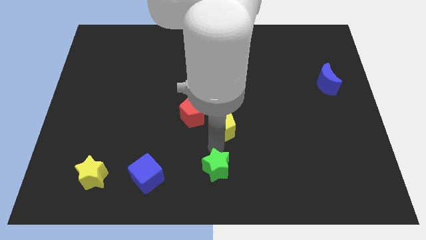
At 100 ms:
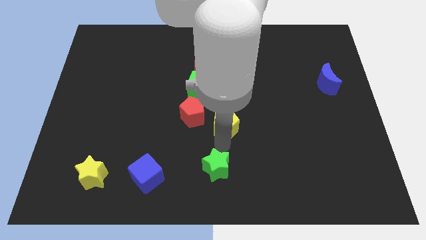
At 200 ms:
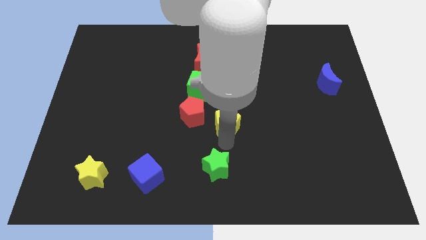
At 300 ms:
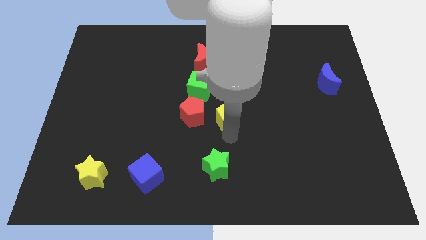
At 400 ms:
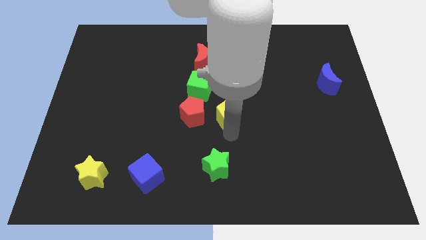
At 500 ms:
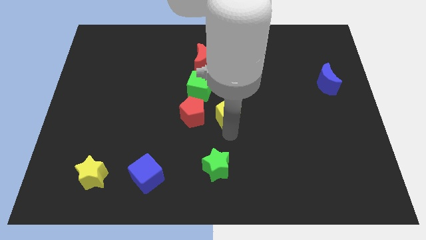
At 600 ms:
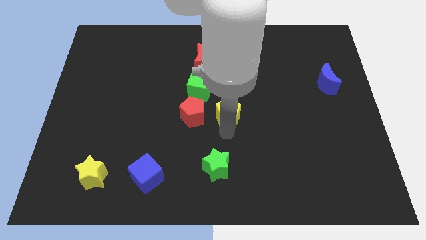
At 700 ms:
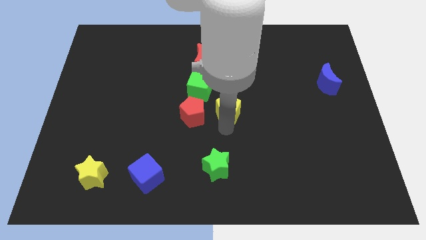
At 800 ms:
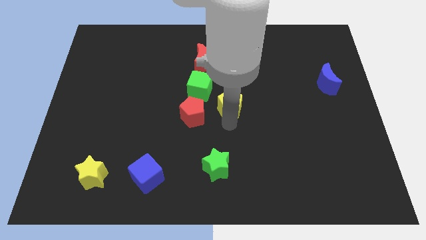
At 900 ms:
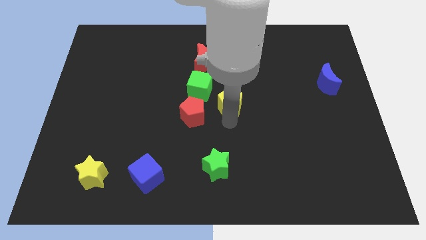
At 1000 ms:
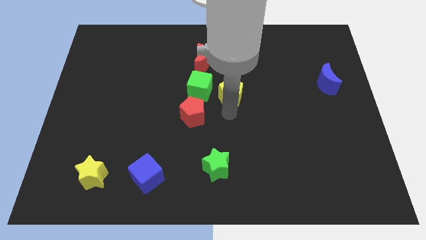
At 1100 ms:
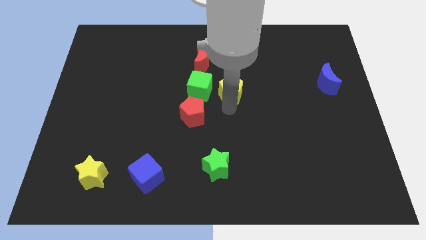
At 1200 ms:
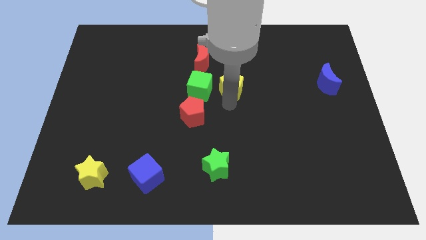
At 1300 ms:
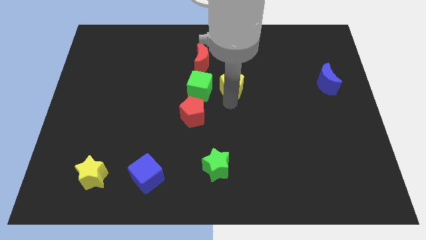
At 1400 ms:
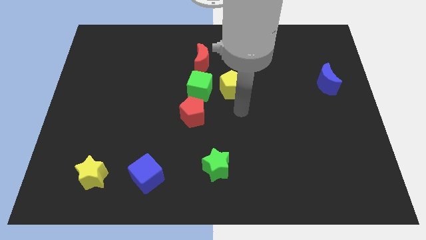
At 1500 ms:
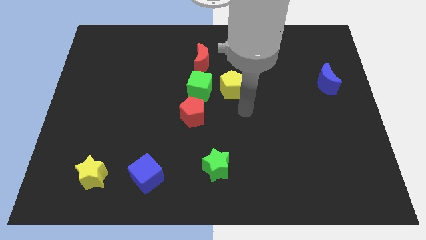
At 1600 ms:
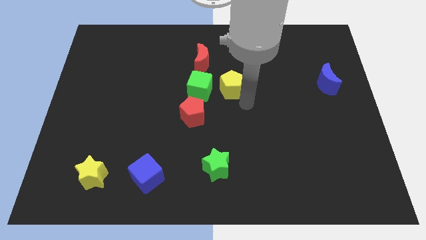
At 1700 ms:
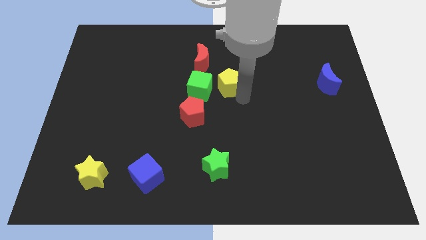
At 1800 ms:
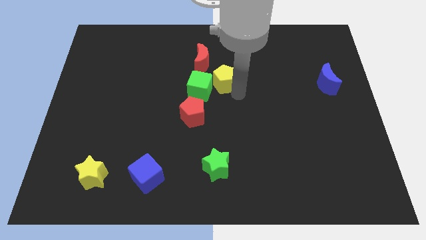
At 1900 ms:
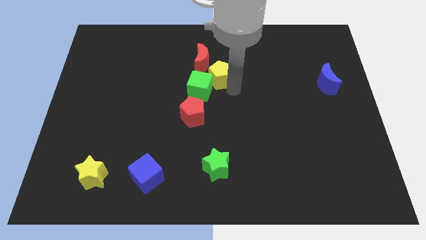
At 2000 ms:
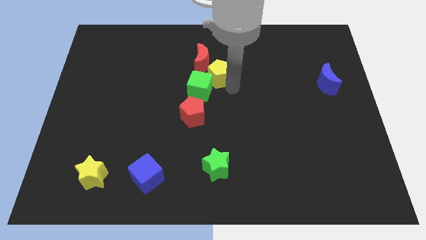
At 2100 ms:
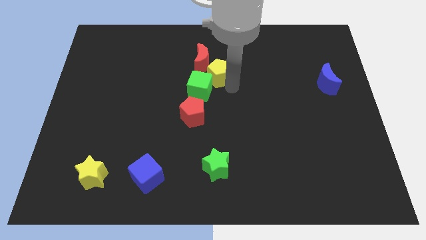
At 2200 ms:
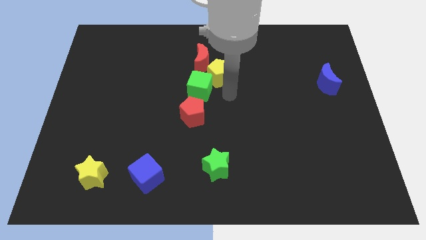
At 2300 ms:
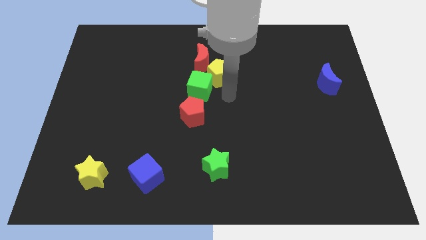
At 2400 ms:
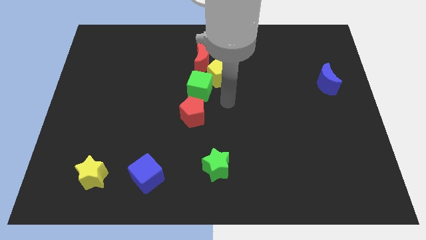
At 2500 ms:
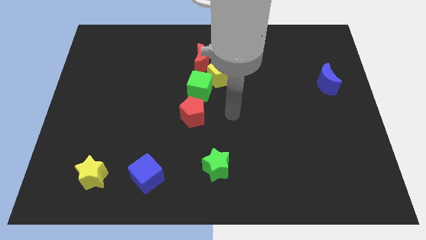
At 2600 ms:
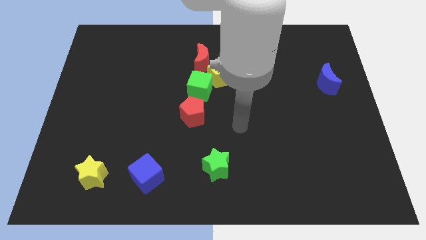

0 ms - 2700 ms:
move the yellow pentagon towards the red crescent

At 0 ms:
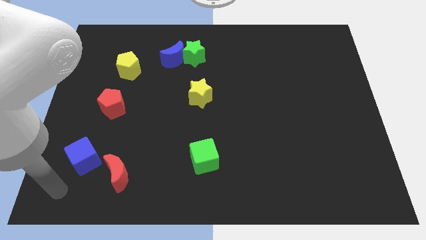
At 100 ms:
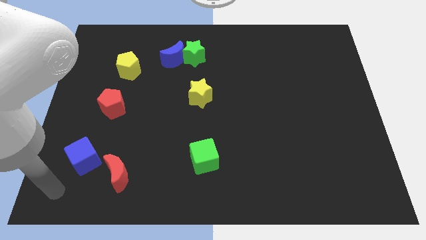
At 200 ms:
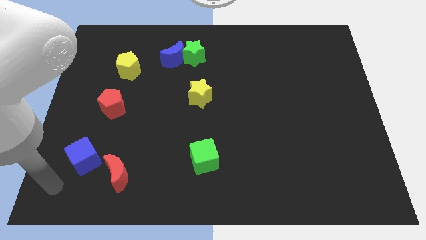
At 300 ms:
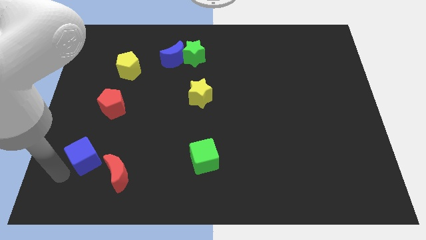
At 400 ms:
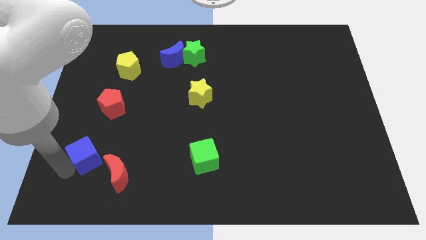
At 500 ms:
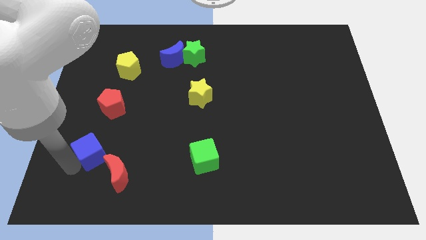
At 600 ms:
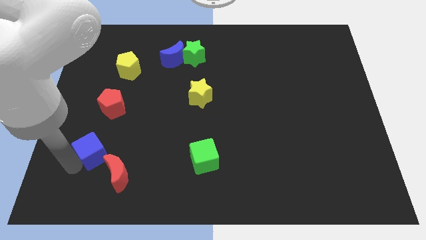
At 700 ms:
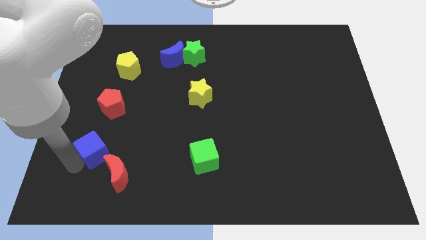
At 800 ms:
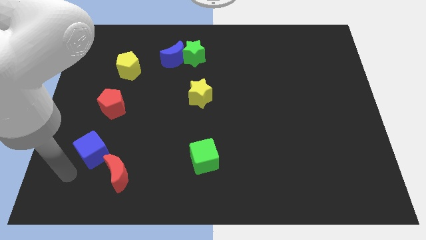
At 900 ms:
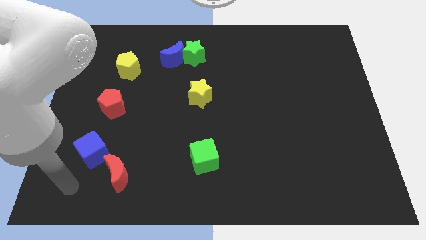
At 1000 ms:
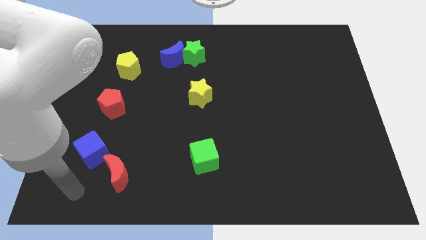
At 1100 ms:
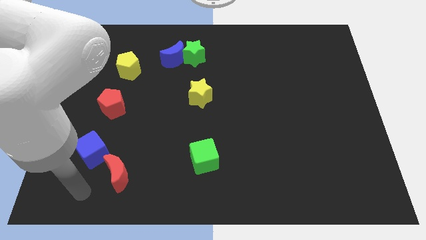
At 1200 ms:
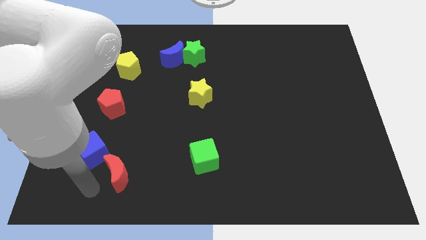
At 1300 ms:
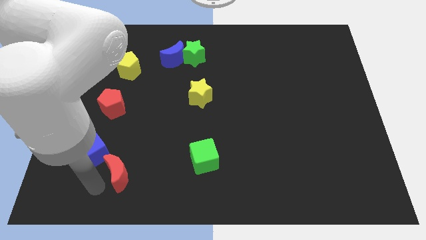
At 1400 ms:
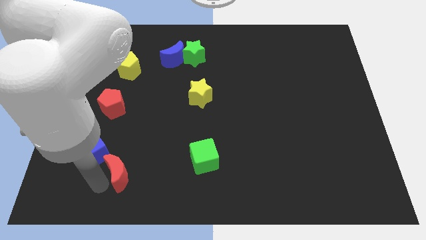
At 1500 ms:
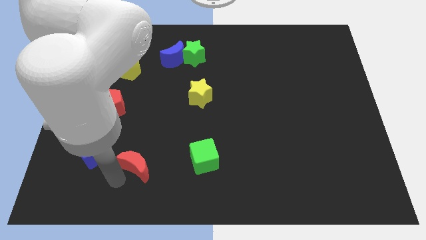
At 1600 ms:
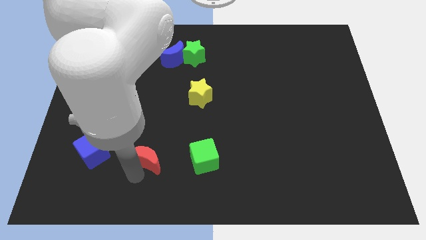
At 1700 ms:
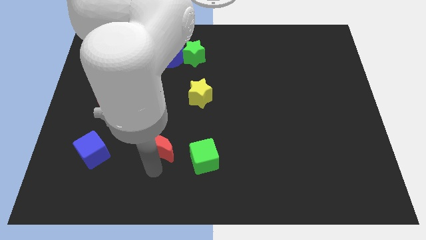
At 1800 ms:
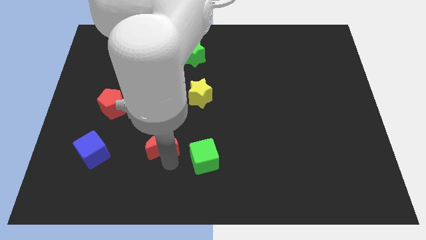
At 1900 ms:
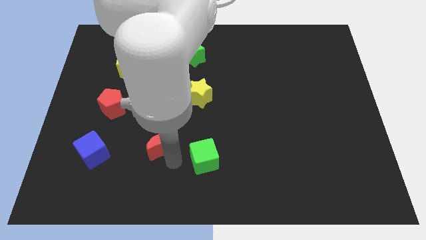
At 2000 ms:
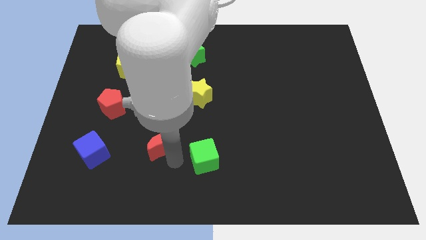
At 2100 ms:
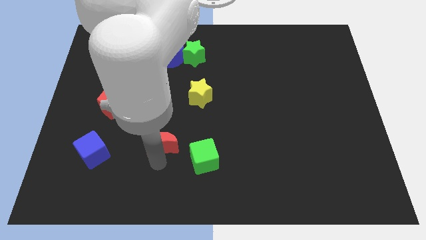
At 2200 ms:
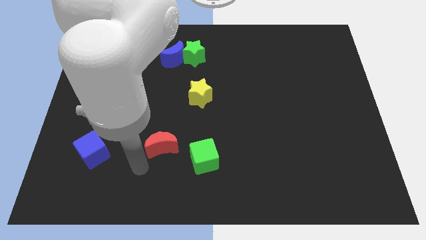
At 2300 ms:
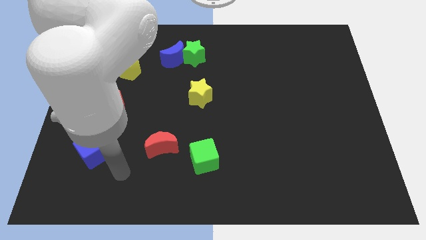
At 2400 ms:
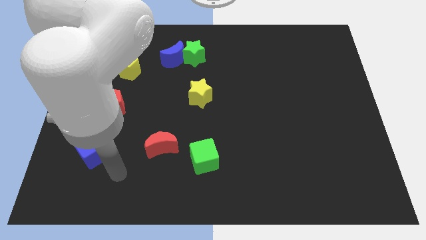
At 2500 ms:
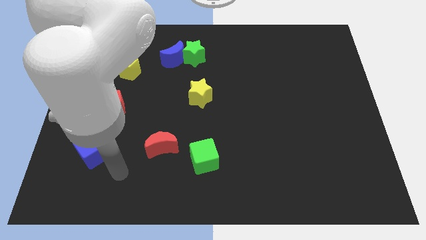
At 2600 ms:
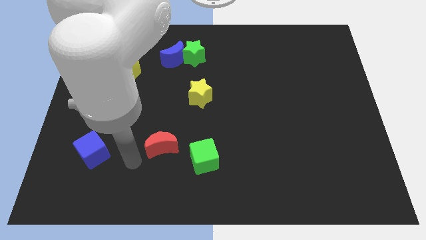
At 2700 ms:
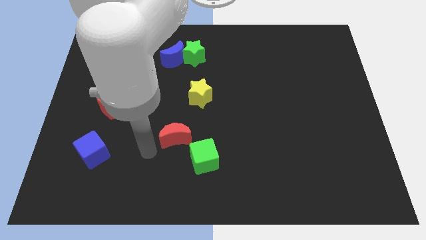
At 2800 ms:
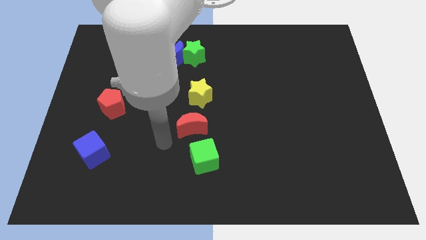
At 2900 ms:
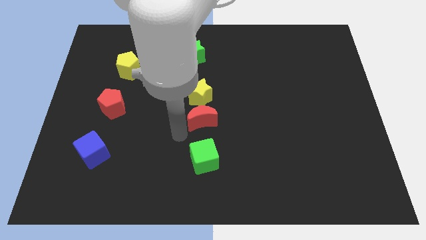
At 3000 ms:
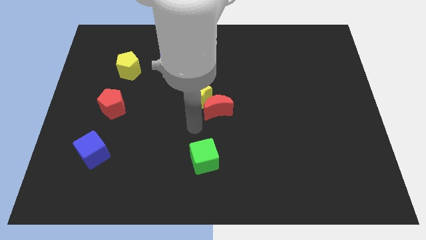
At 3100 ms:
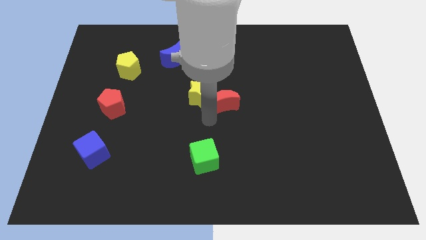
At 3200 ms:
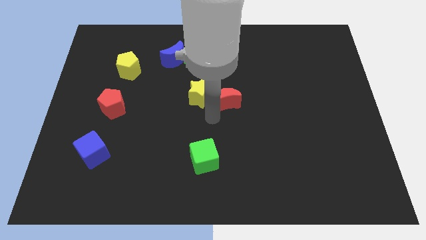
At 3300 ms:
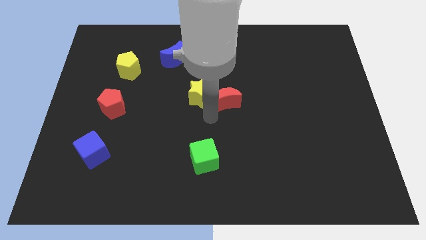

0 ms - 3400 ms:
move the red moon diagonally top right to the blue cube

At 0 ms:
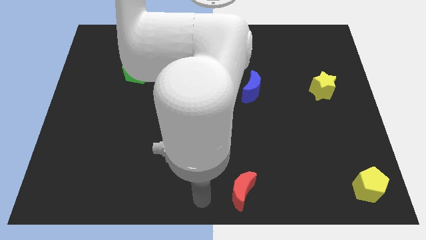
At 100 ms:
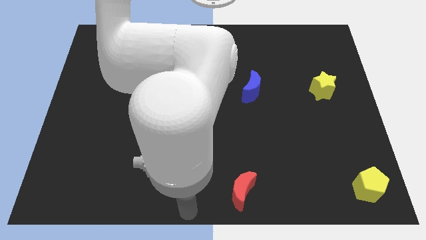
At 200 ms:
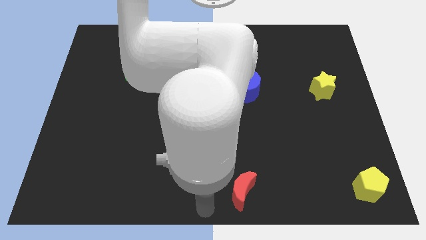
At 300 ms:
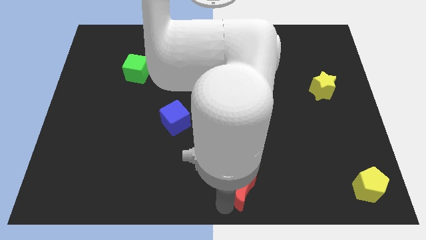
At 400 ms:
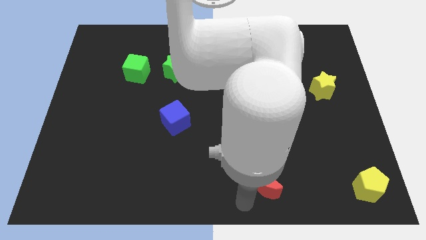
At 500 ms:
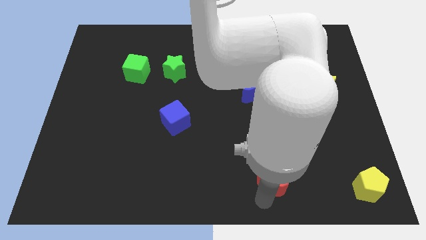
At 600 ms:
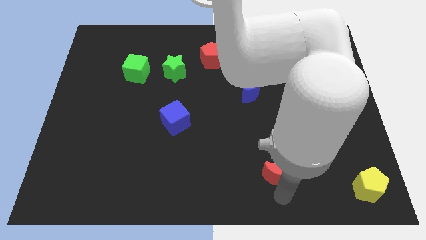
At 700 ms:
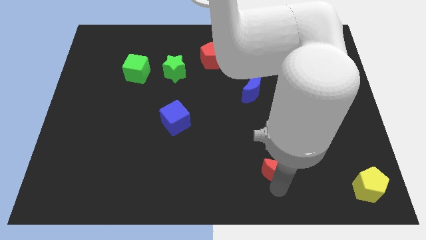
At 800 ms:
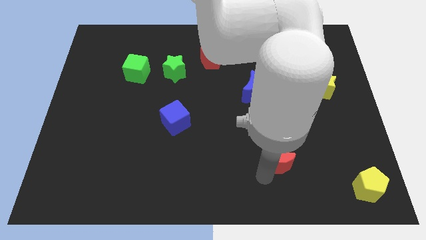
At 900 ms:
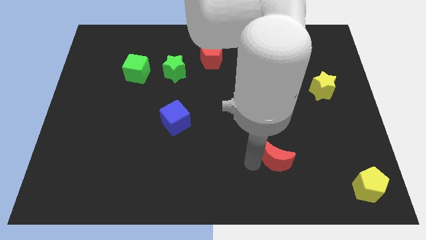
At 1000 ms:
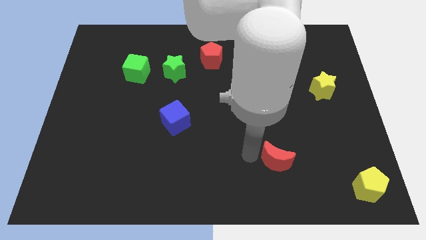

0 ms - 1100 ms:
push the red moon to the bottom right side of the blue moon

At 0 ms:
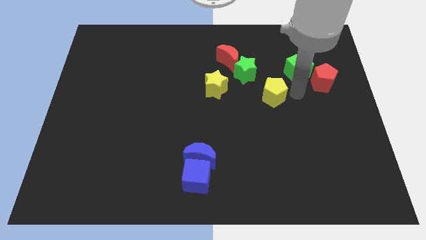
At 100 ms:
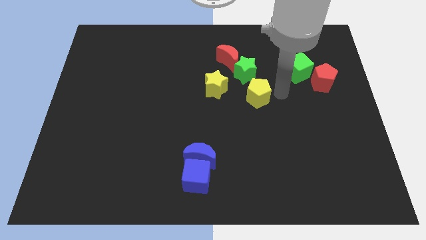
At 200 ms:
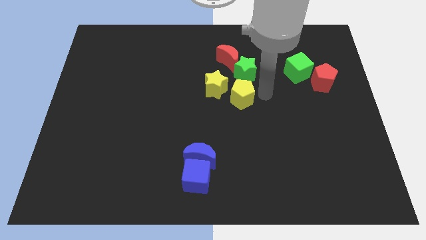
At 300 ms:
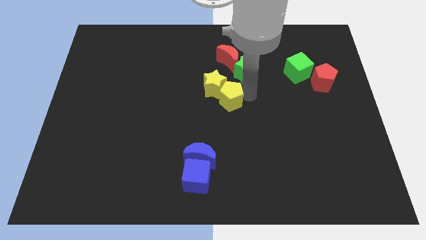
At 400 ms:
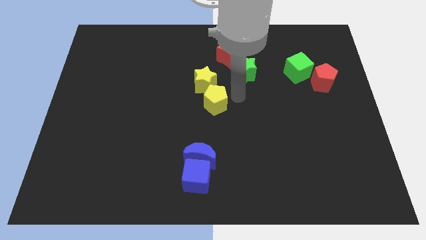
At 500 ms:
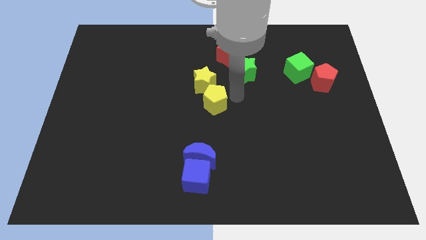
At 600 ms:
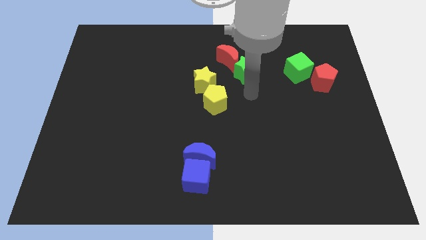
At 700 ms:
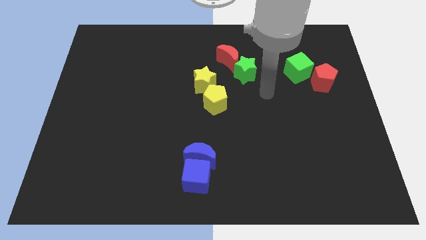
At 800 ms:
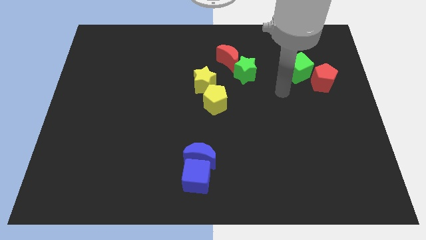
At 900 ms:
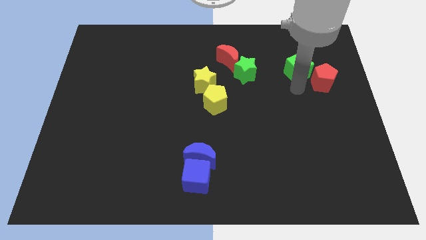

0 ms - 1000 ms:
push the yellow pentagon towards left

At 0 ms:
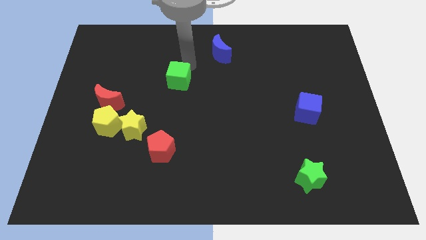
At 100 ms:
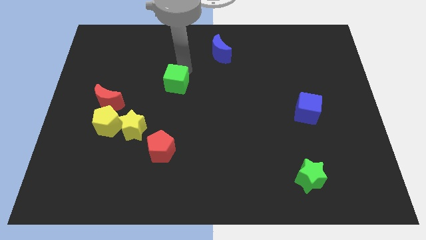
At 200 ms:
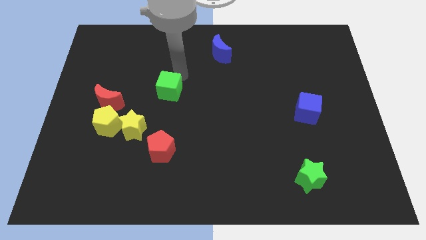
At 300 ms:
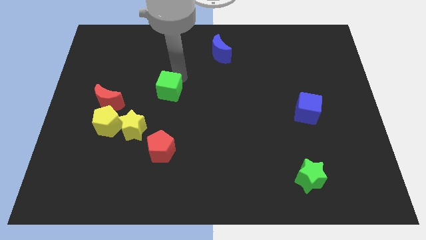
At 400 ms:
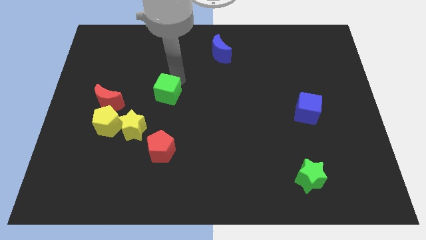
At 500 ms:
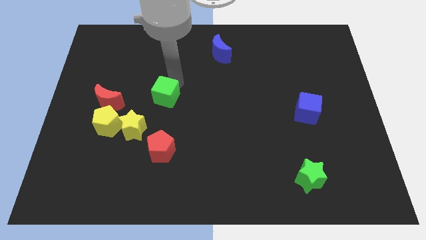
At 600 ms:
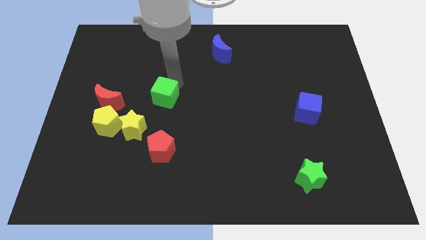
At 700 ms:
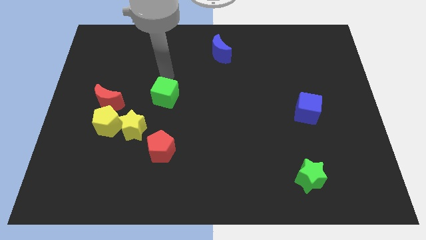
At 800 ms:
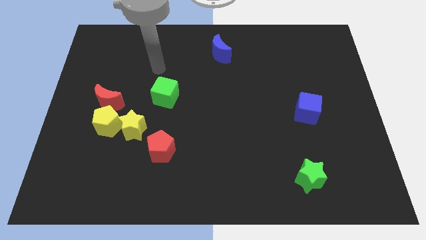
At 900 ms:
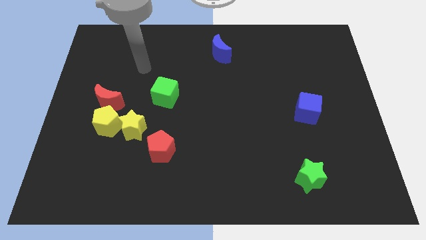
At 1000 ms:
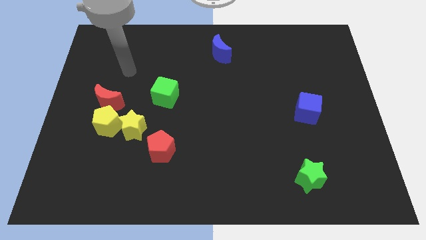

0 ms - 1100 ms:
move green cube close to the yellow star
